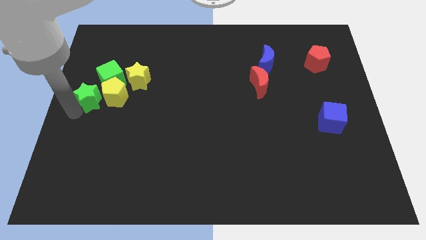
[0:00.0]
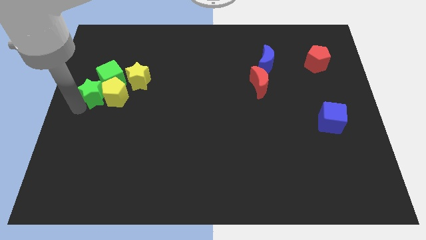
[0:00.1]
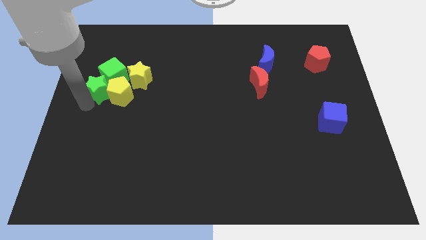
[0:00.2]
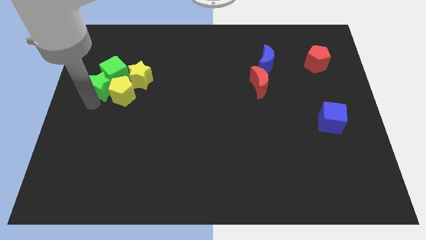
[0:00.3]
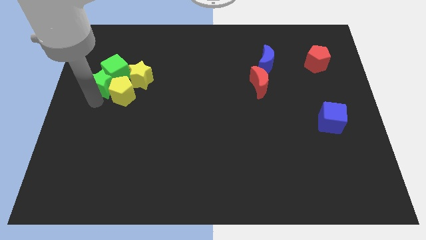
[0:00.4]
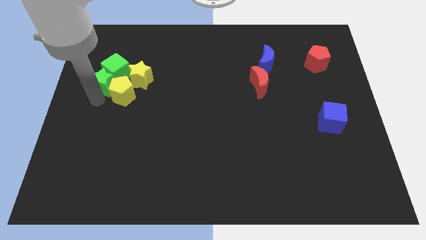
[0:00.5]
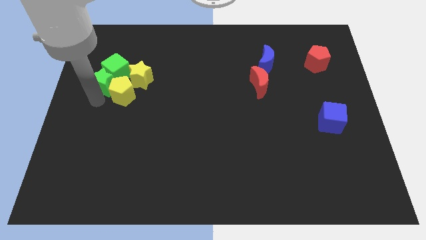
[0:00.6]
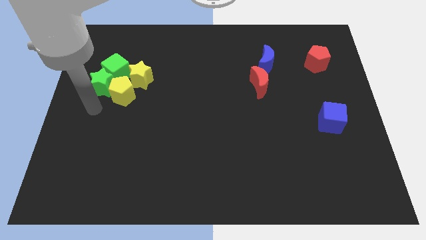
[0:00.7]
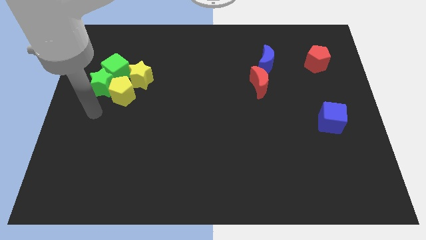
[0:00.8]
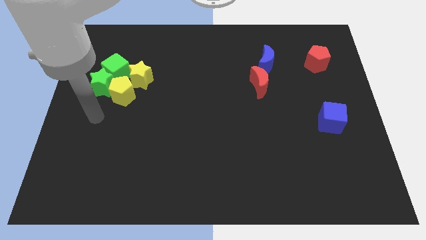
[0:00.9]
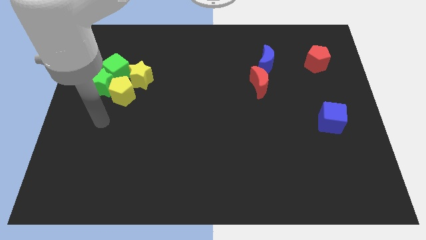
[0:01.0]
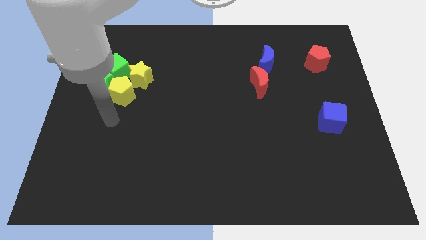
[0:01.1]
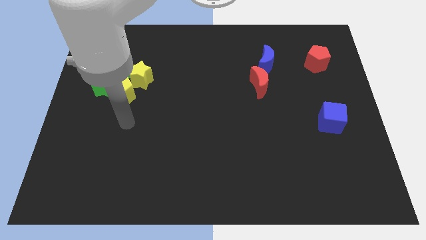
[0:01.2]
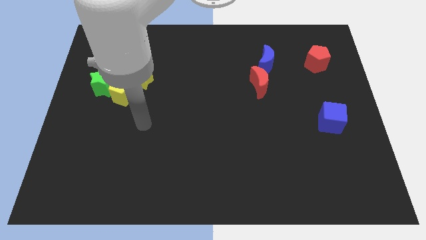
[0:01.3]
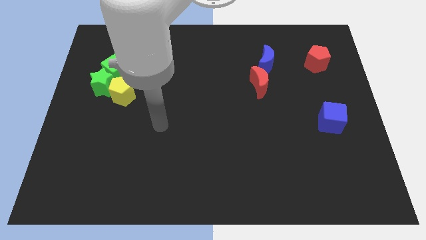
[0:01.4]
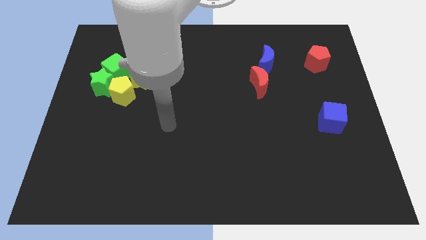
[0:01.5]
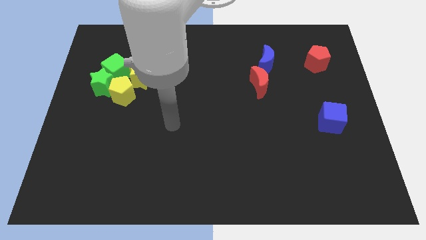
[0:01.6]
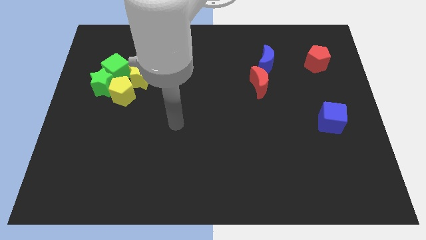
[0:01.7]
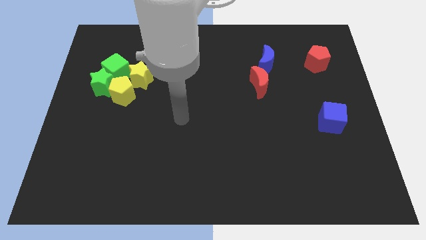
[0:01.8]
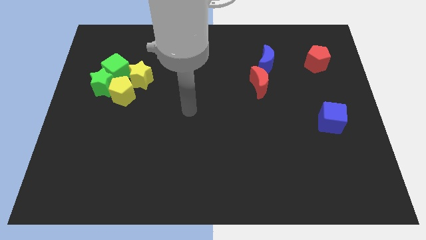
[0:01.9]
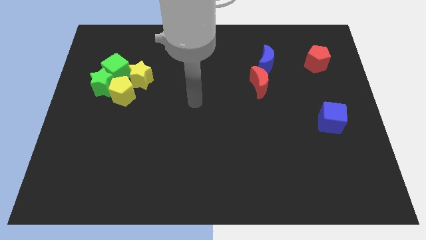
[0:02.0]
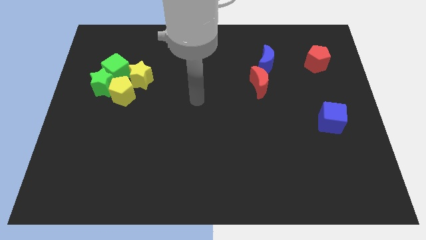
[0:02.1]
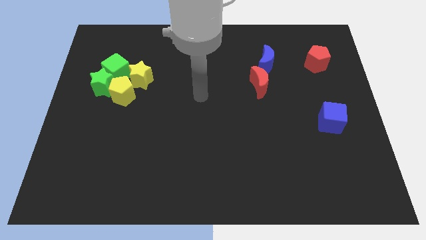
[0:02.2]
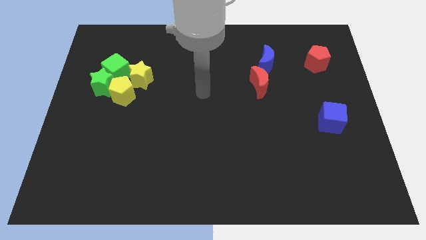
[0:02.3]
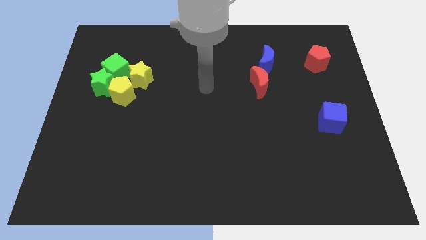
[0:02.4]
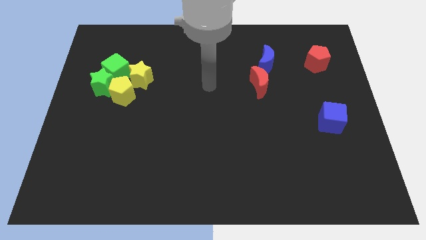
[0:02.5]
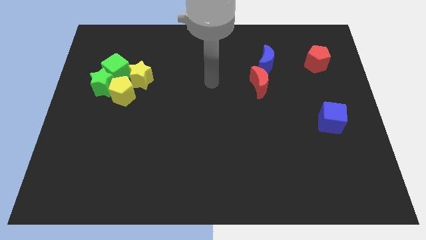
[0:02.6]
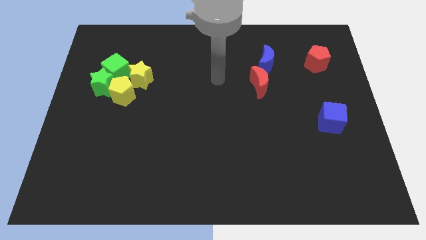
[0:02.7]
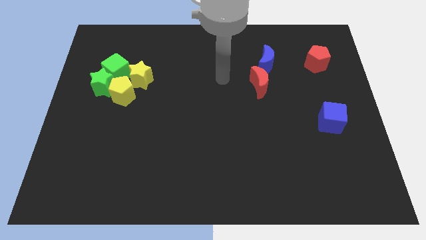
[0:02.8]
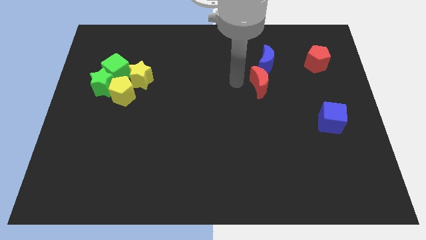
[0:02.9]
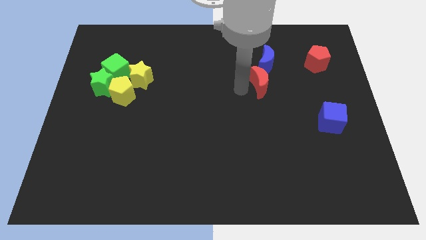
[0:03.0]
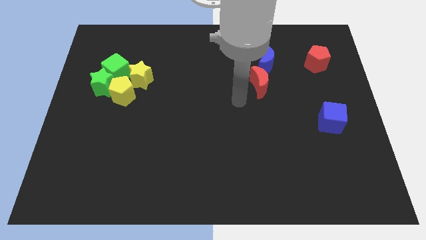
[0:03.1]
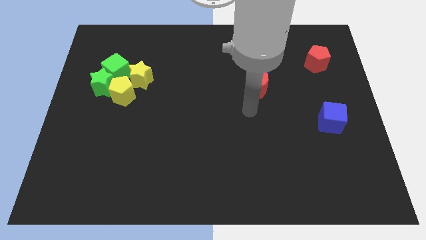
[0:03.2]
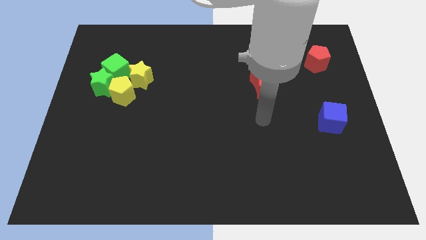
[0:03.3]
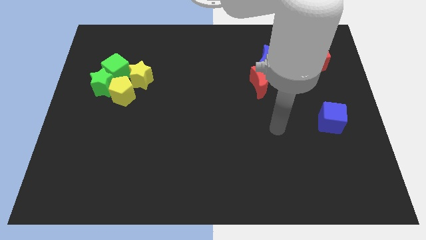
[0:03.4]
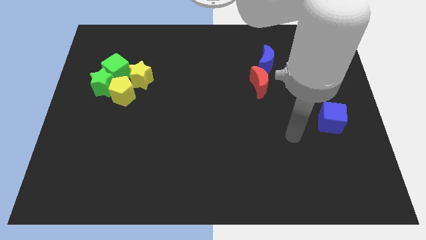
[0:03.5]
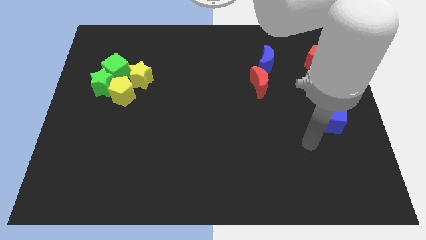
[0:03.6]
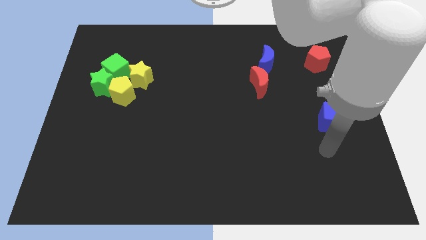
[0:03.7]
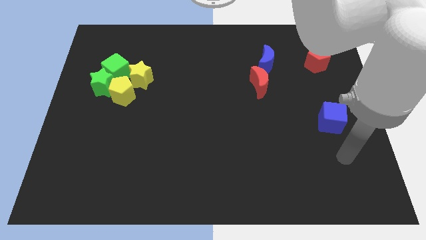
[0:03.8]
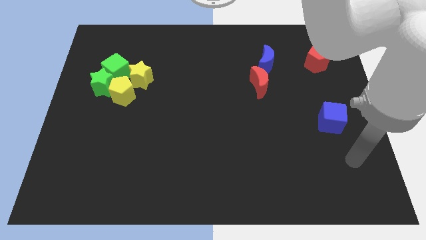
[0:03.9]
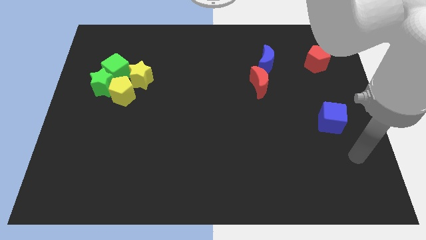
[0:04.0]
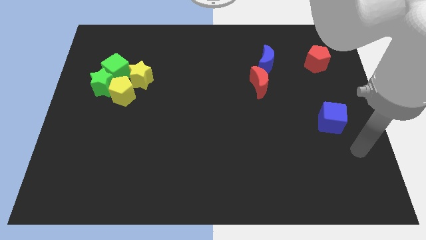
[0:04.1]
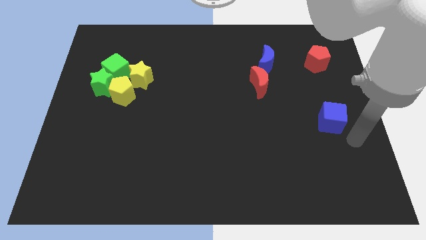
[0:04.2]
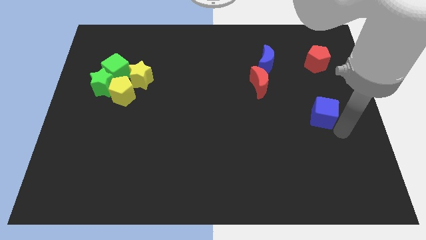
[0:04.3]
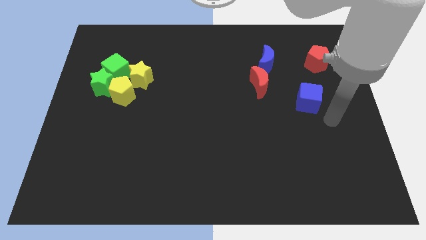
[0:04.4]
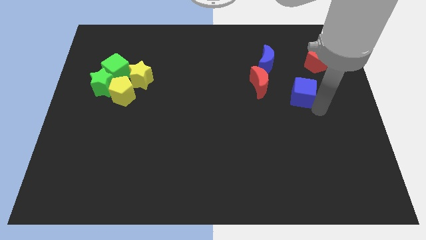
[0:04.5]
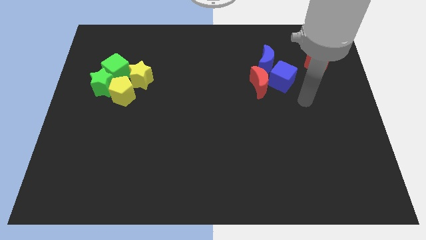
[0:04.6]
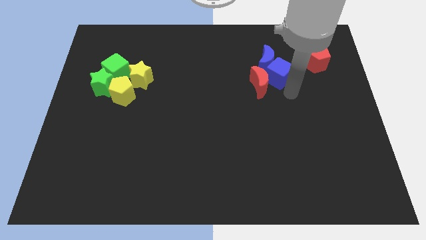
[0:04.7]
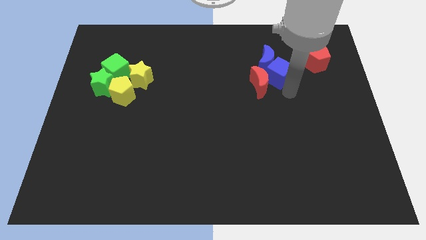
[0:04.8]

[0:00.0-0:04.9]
push the blue cube into the blue crescent

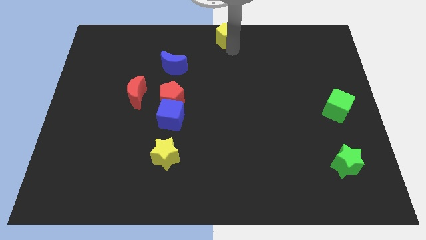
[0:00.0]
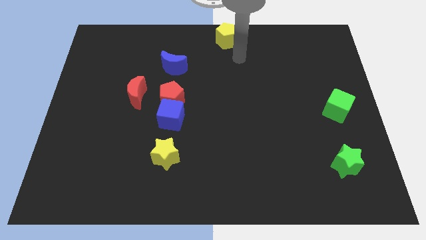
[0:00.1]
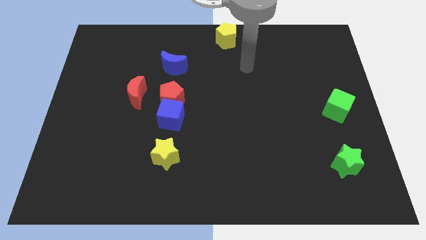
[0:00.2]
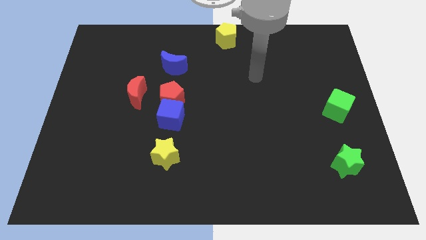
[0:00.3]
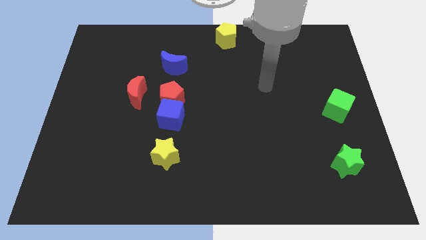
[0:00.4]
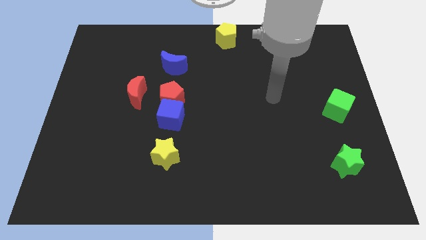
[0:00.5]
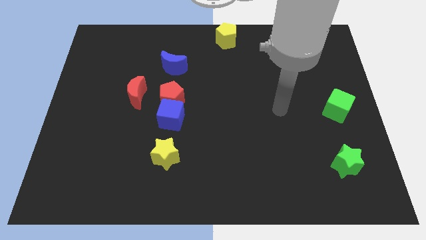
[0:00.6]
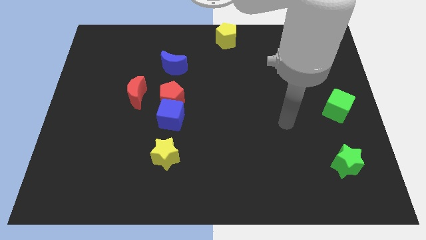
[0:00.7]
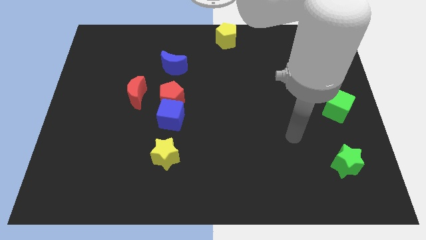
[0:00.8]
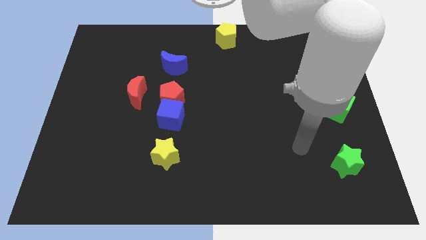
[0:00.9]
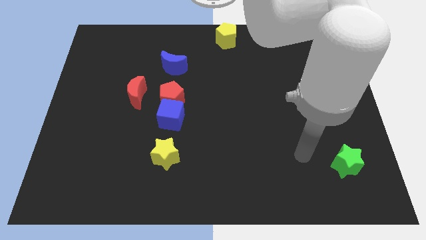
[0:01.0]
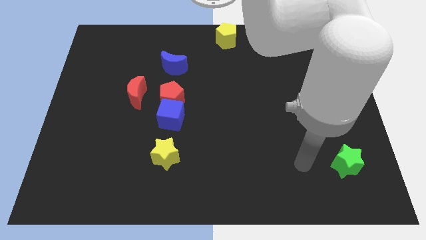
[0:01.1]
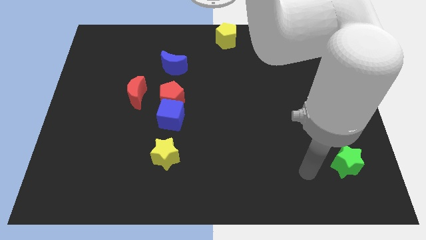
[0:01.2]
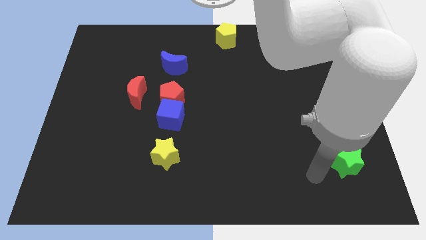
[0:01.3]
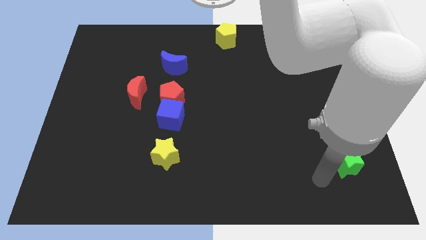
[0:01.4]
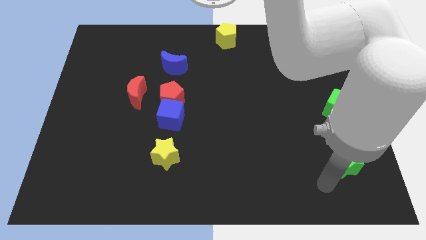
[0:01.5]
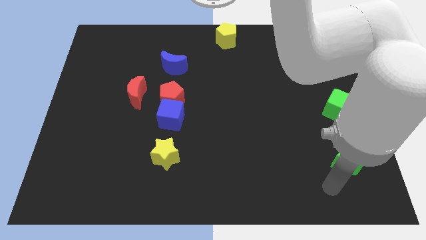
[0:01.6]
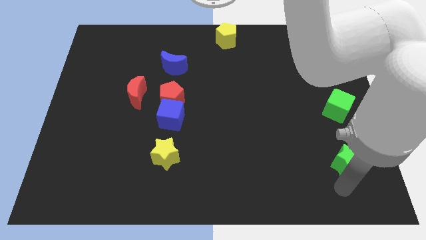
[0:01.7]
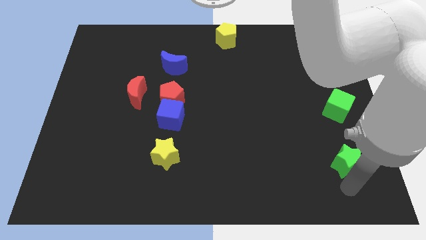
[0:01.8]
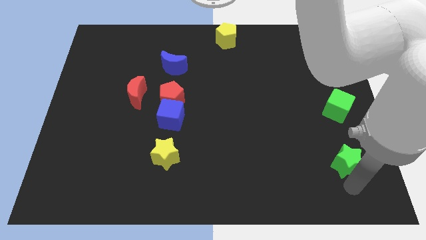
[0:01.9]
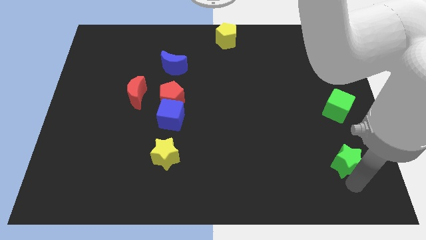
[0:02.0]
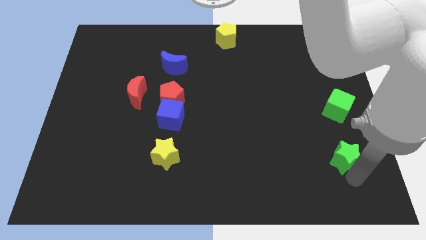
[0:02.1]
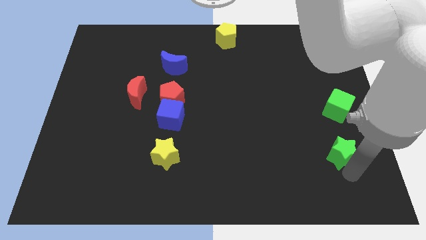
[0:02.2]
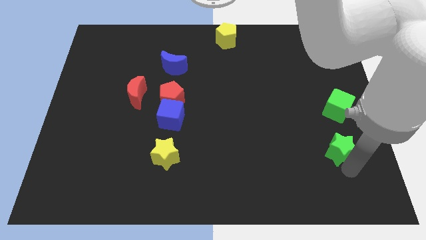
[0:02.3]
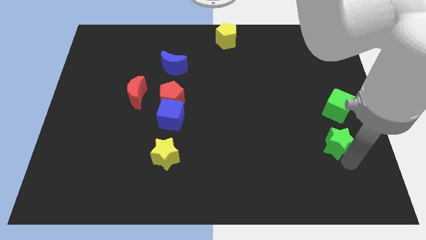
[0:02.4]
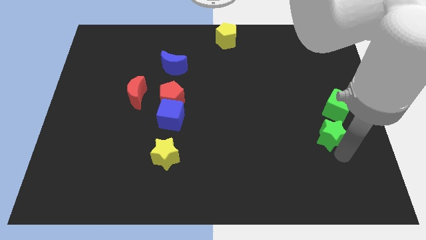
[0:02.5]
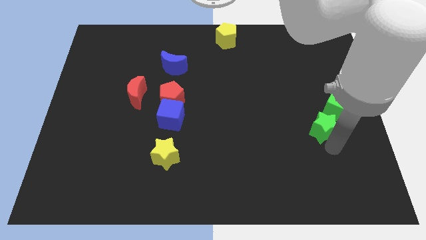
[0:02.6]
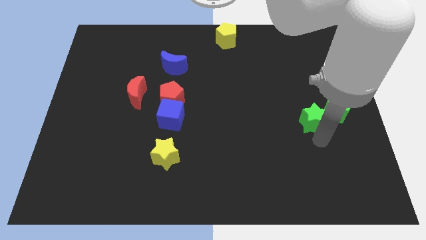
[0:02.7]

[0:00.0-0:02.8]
place the green star parallel to blue cube

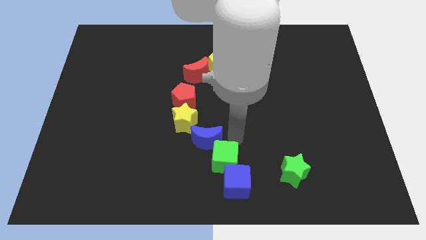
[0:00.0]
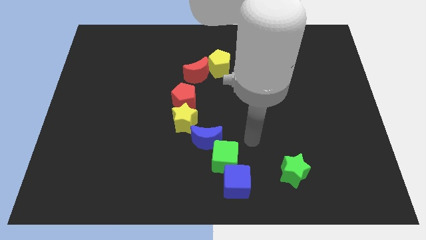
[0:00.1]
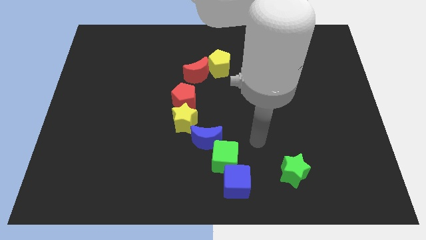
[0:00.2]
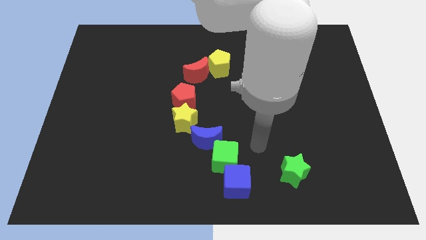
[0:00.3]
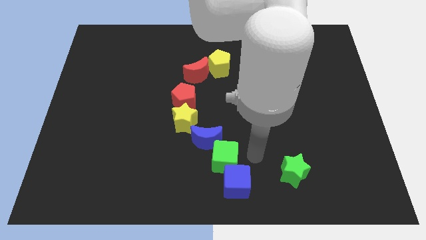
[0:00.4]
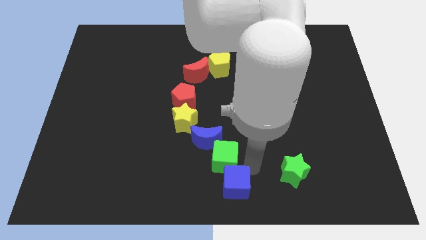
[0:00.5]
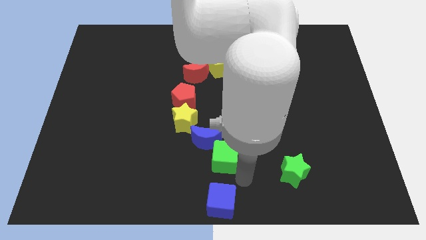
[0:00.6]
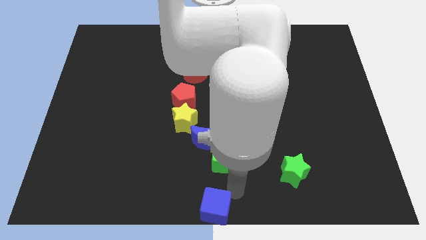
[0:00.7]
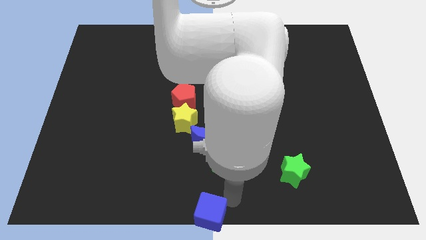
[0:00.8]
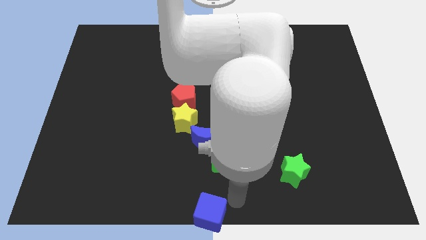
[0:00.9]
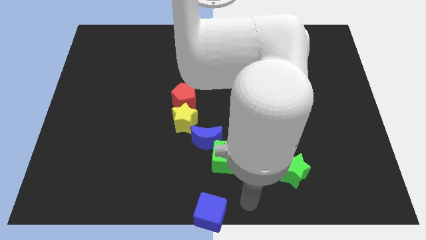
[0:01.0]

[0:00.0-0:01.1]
push the blue cube to the bottom center of the board

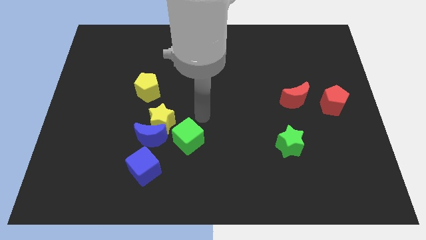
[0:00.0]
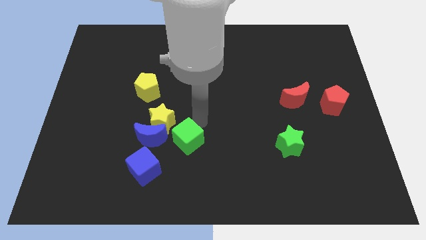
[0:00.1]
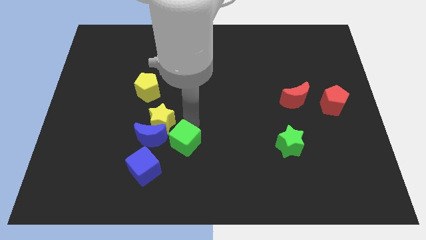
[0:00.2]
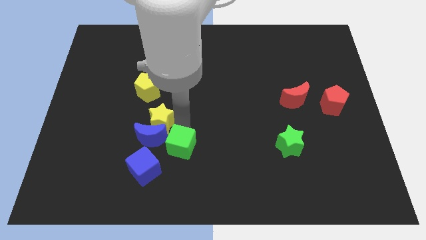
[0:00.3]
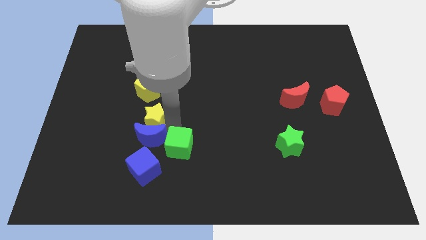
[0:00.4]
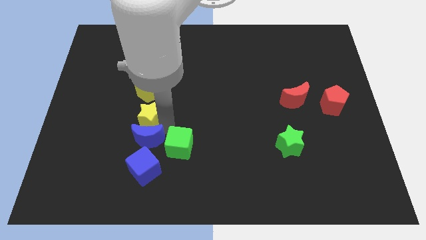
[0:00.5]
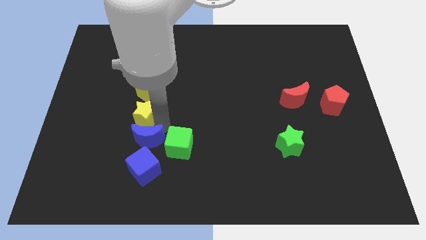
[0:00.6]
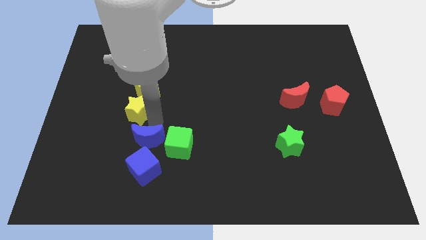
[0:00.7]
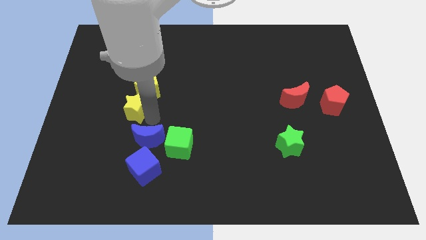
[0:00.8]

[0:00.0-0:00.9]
push the yellow star close to the yellow pentagon
